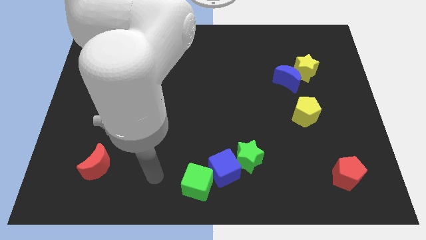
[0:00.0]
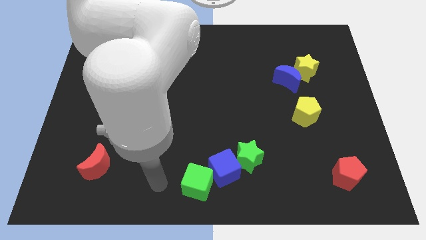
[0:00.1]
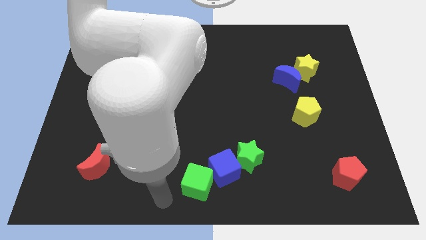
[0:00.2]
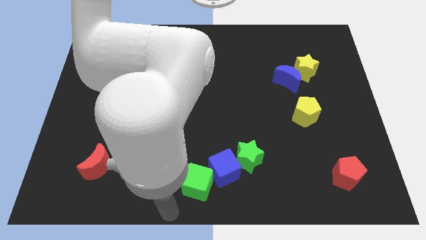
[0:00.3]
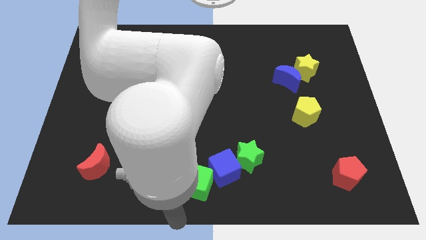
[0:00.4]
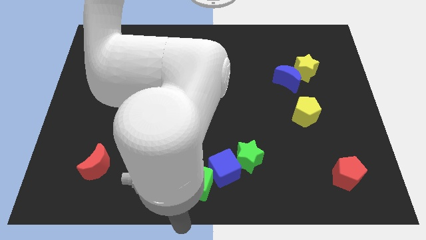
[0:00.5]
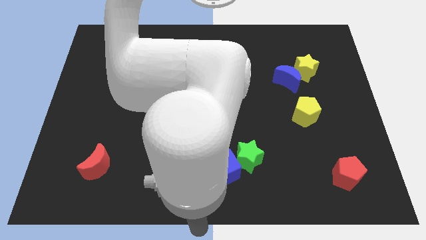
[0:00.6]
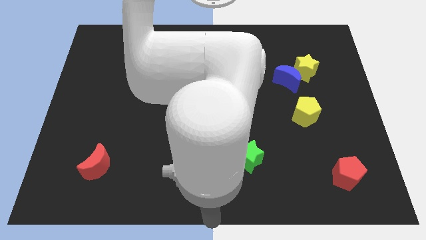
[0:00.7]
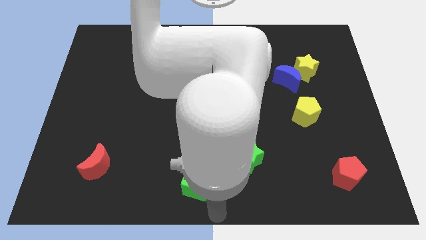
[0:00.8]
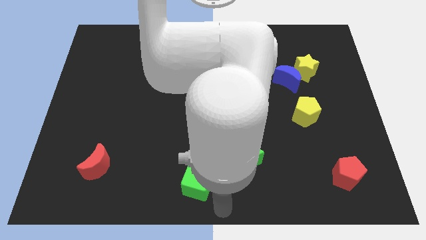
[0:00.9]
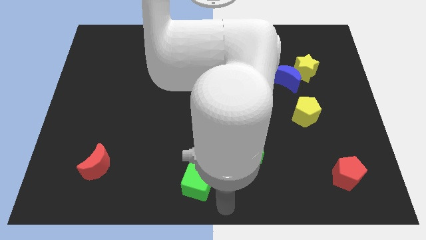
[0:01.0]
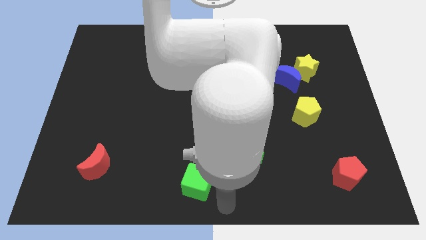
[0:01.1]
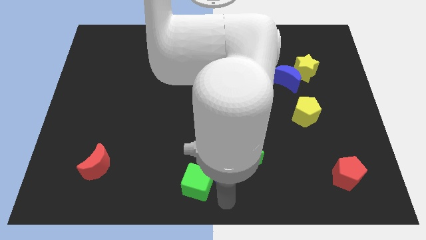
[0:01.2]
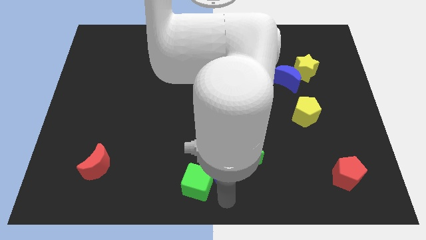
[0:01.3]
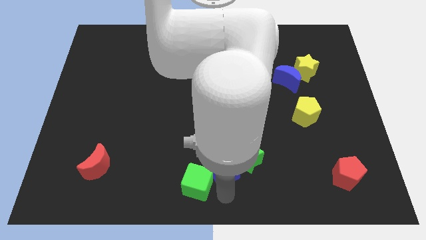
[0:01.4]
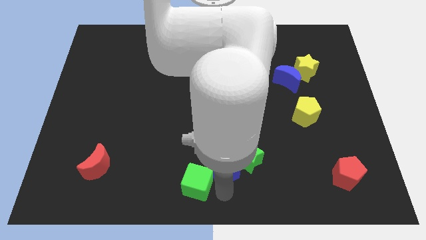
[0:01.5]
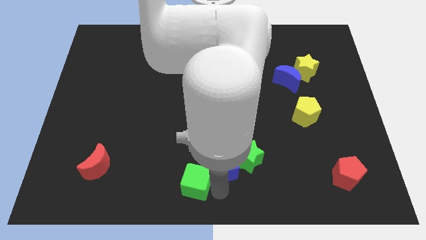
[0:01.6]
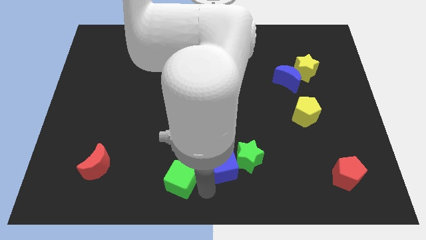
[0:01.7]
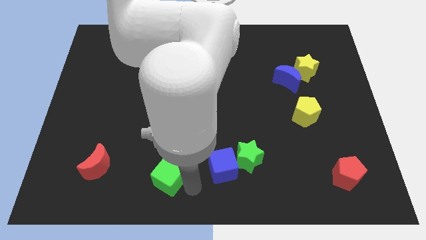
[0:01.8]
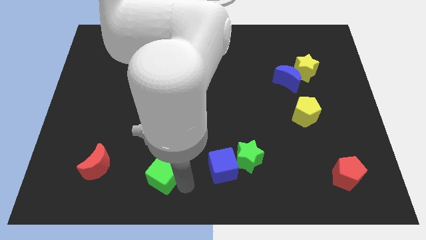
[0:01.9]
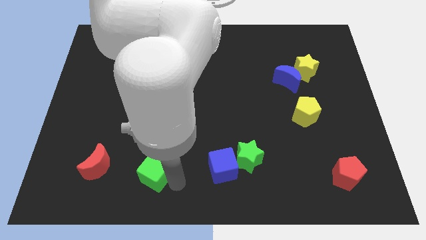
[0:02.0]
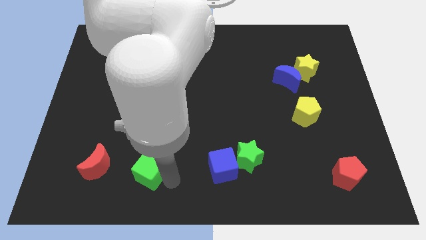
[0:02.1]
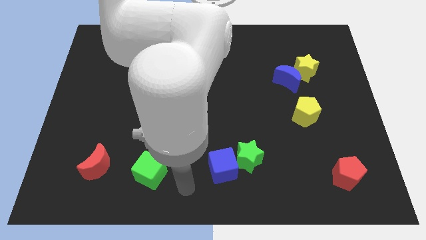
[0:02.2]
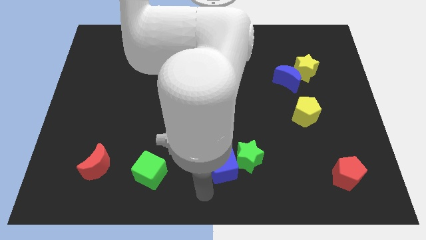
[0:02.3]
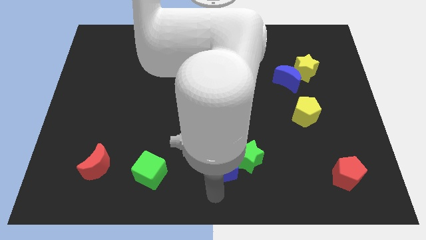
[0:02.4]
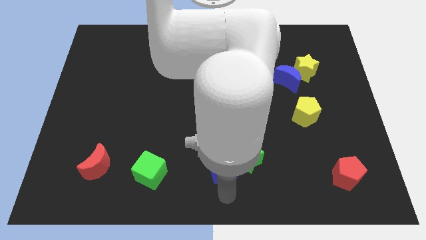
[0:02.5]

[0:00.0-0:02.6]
move the green cube close to the red crescent

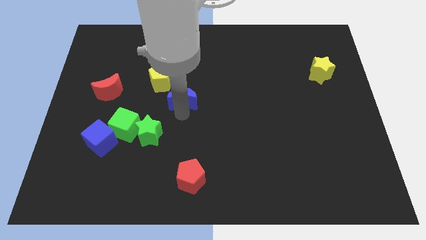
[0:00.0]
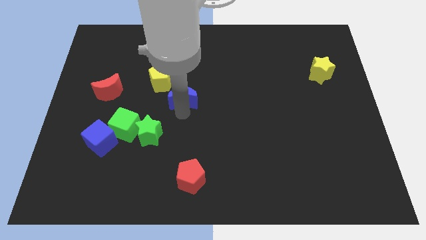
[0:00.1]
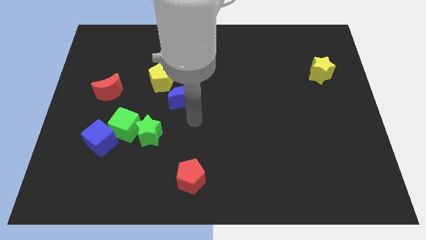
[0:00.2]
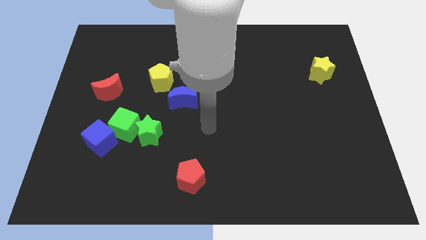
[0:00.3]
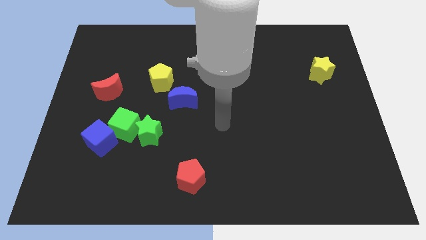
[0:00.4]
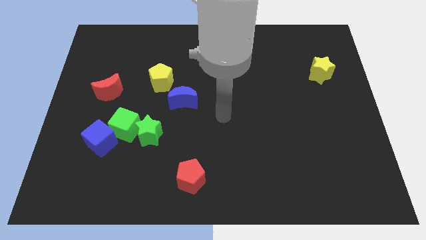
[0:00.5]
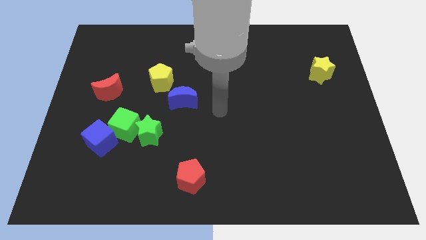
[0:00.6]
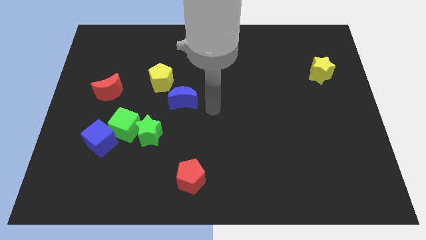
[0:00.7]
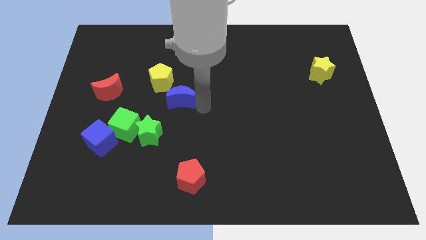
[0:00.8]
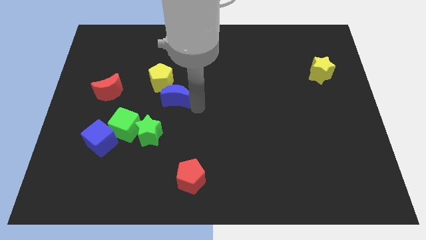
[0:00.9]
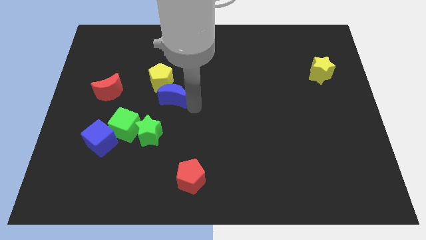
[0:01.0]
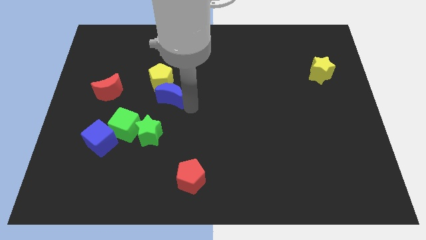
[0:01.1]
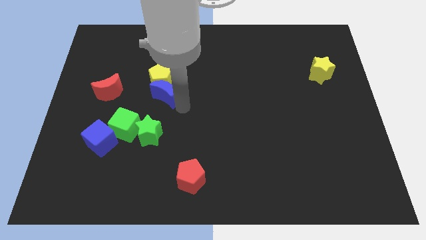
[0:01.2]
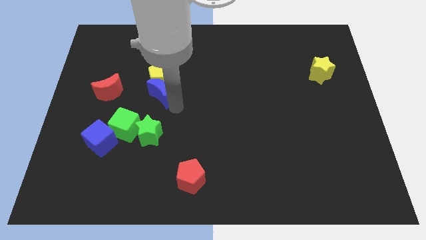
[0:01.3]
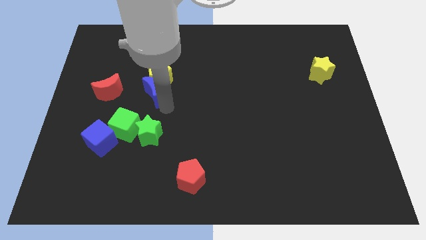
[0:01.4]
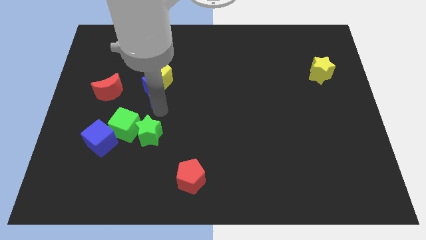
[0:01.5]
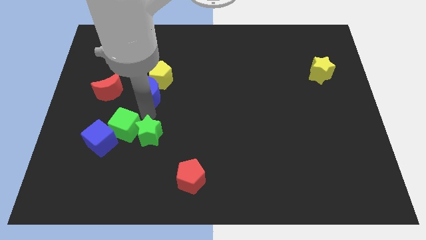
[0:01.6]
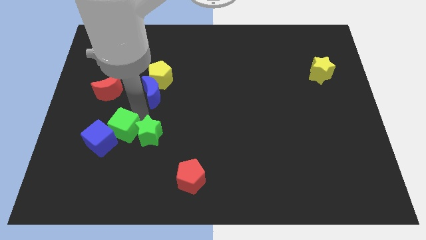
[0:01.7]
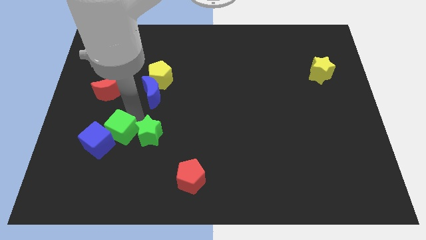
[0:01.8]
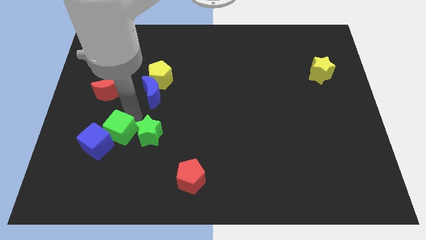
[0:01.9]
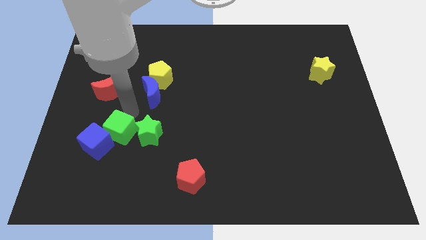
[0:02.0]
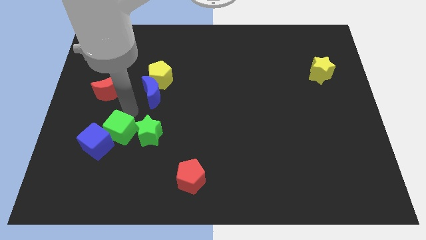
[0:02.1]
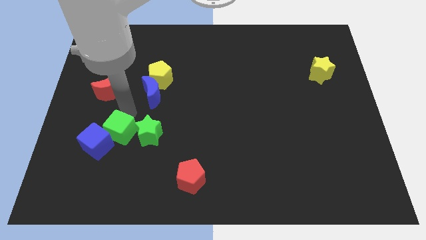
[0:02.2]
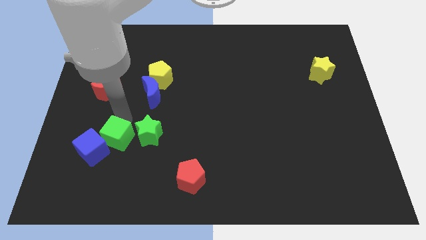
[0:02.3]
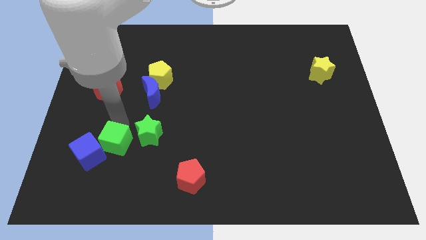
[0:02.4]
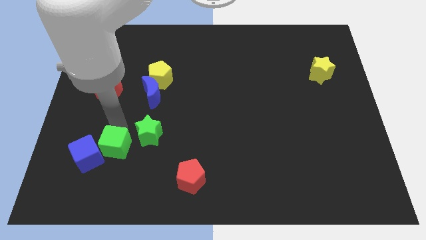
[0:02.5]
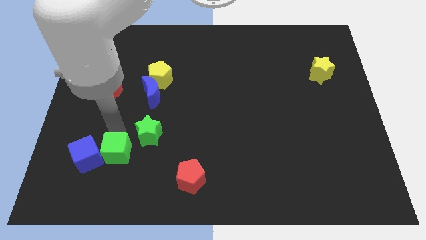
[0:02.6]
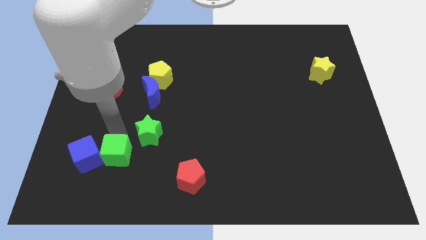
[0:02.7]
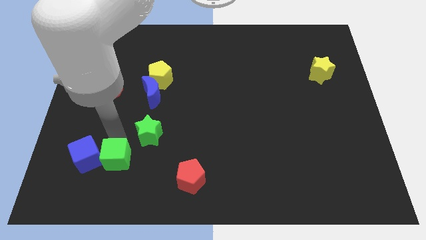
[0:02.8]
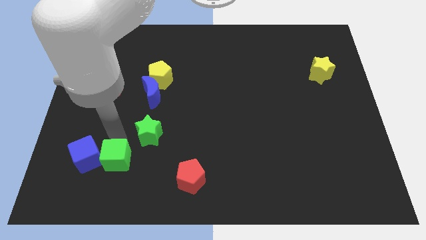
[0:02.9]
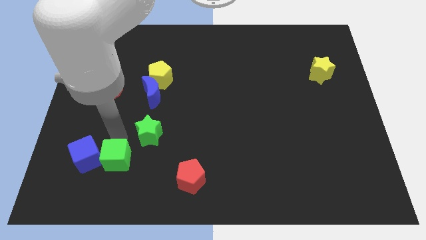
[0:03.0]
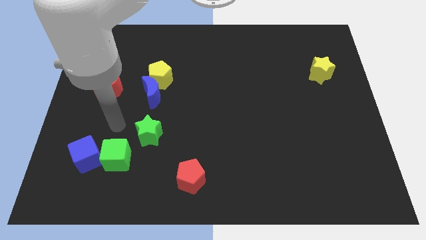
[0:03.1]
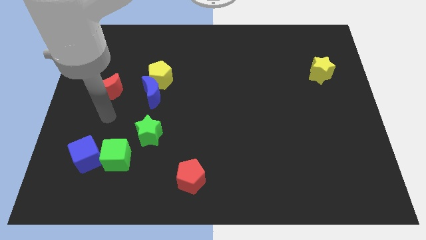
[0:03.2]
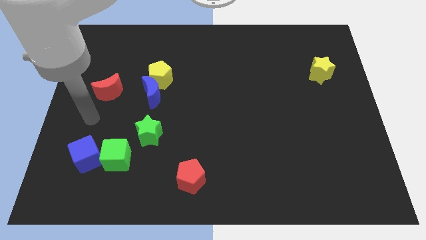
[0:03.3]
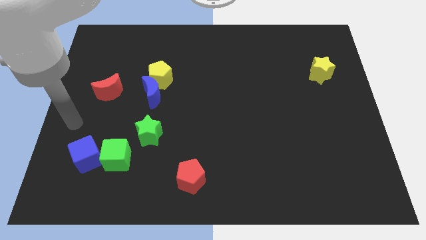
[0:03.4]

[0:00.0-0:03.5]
push green cube downwards

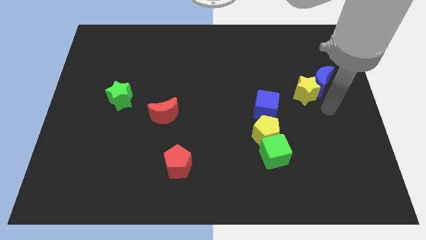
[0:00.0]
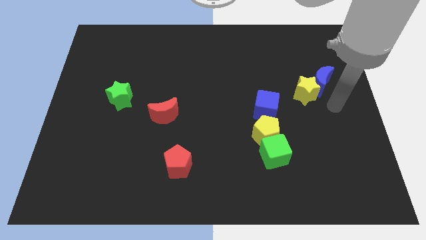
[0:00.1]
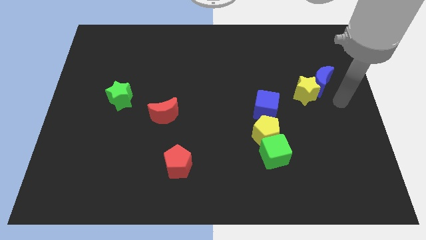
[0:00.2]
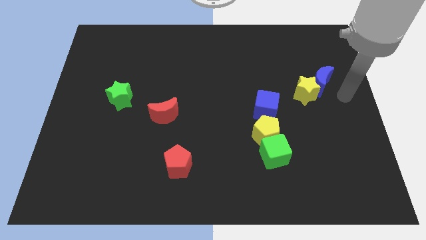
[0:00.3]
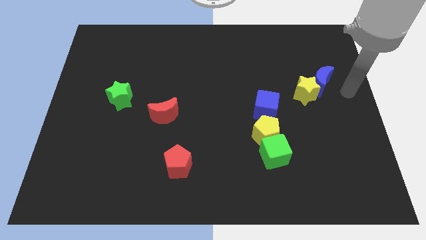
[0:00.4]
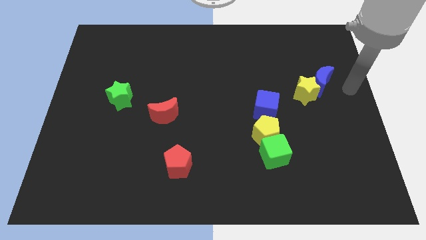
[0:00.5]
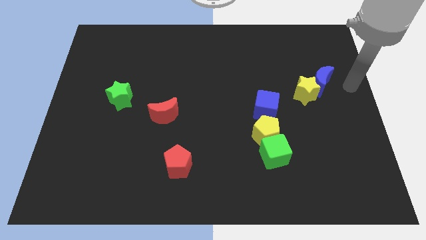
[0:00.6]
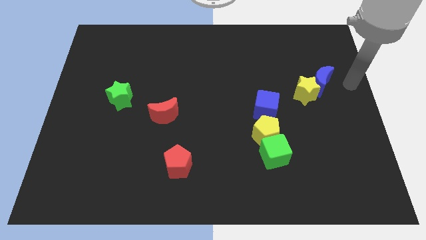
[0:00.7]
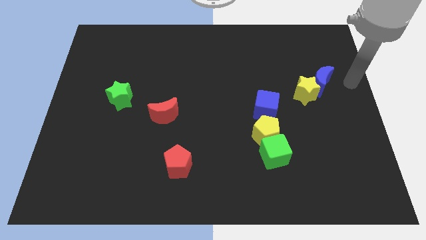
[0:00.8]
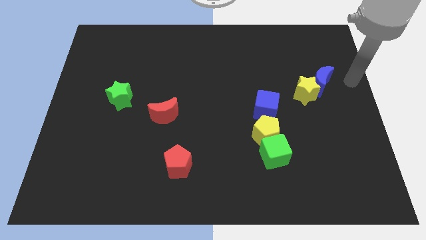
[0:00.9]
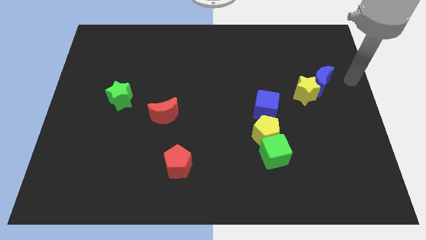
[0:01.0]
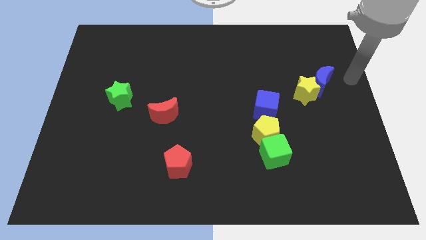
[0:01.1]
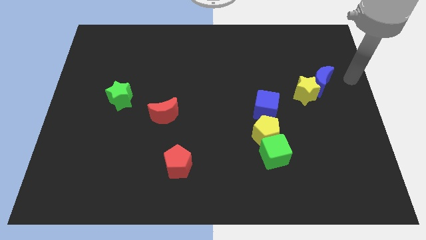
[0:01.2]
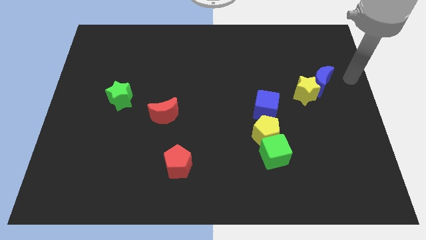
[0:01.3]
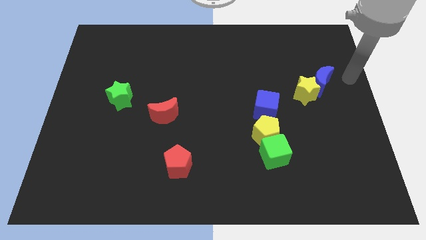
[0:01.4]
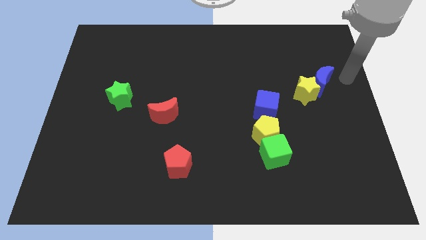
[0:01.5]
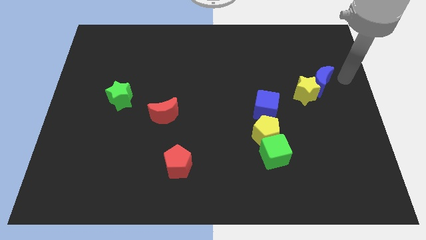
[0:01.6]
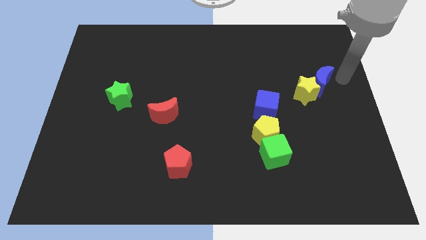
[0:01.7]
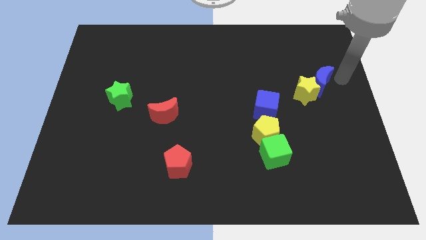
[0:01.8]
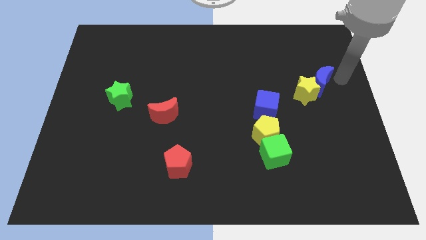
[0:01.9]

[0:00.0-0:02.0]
move the arm towards the top right side of the blue crescent

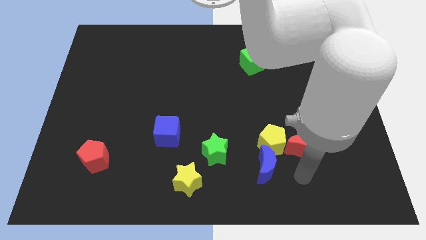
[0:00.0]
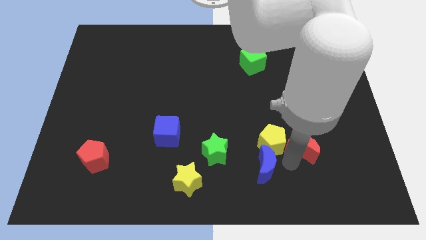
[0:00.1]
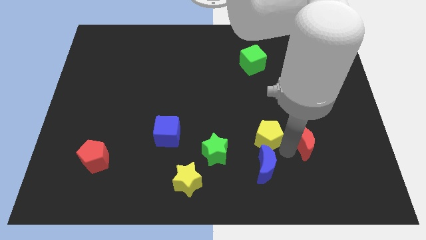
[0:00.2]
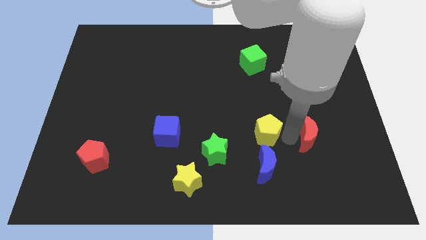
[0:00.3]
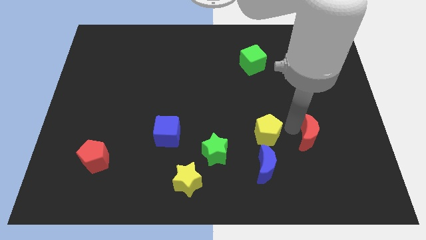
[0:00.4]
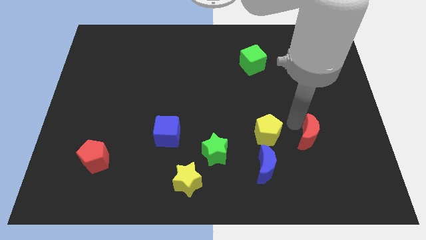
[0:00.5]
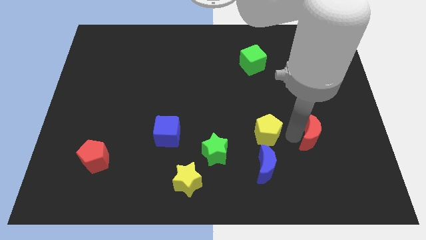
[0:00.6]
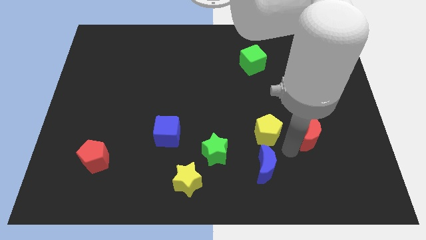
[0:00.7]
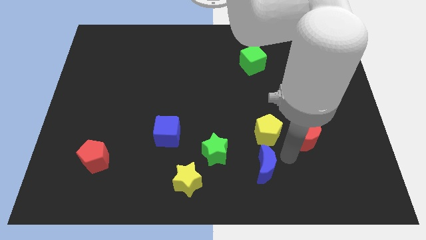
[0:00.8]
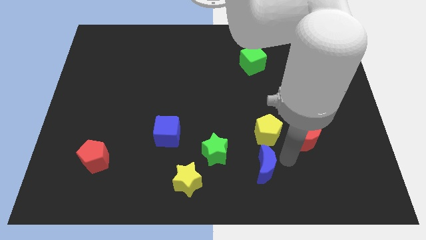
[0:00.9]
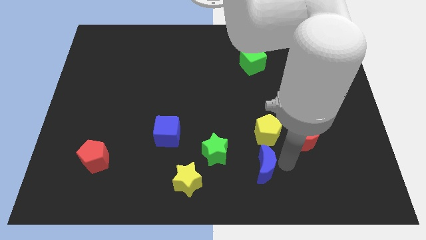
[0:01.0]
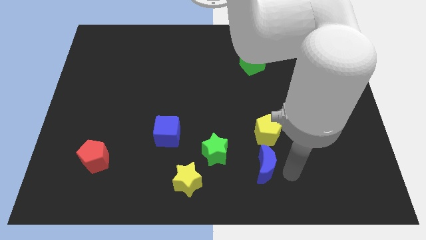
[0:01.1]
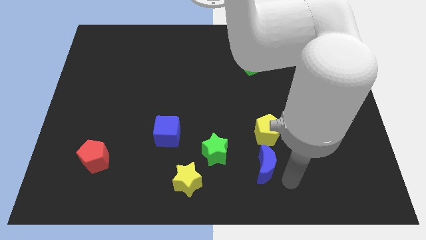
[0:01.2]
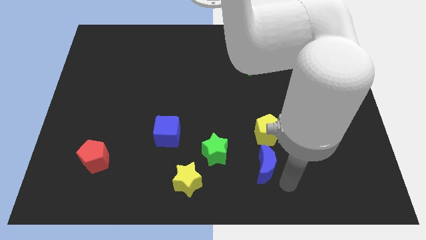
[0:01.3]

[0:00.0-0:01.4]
separate yellow pentagon and the red moon
